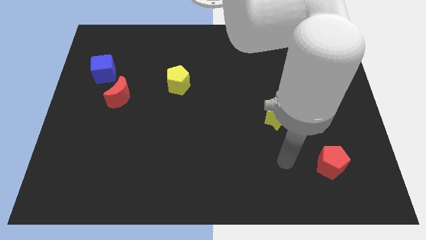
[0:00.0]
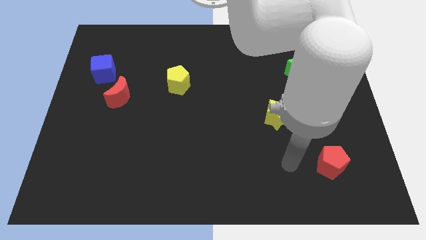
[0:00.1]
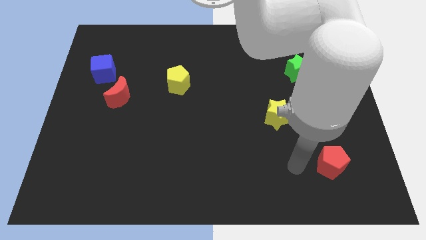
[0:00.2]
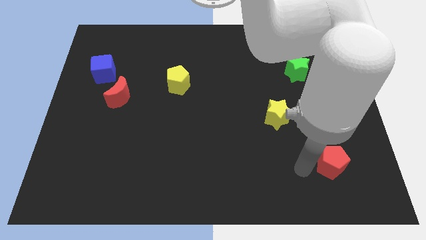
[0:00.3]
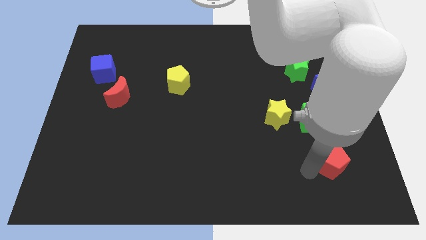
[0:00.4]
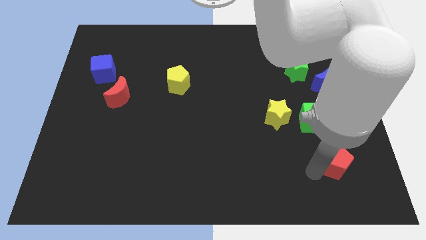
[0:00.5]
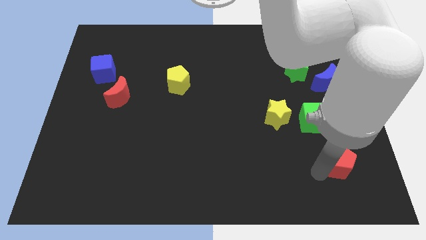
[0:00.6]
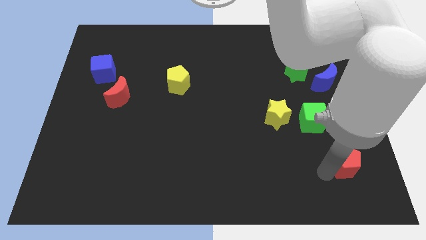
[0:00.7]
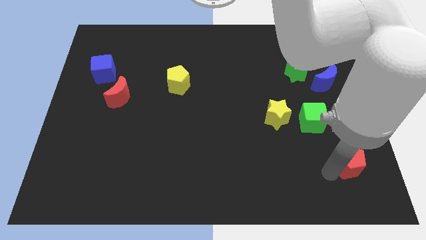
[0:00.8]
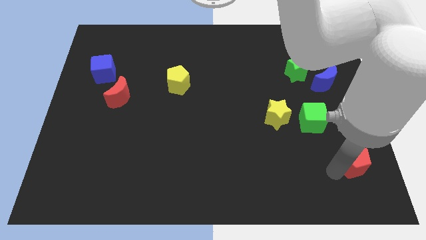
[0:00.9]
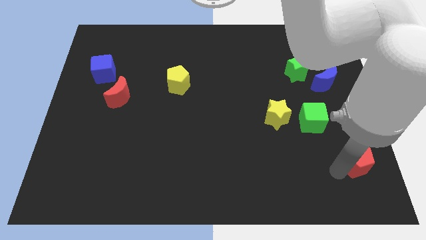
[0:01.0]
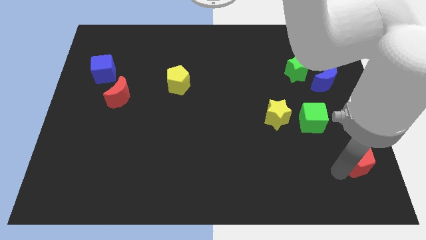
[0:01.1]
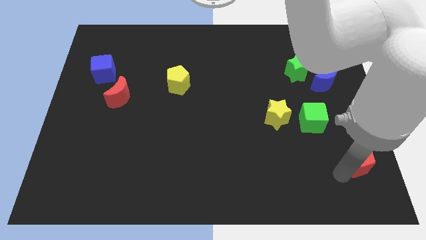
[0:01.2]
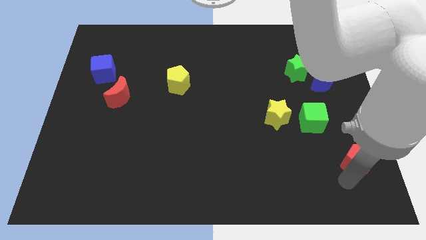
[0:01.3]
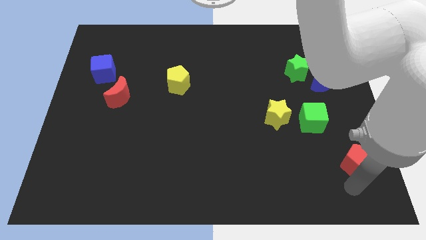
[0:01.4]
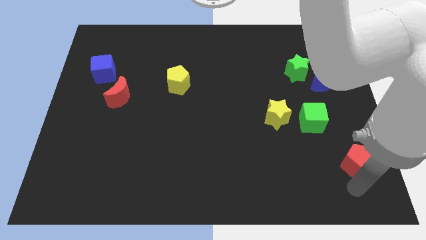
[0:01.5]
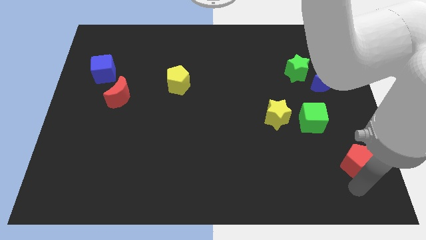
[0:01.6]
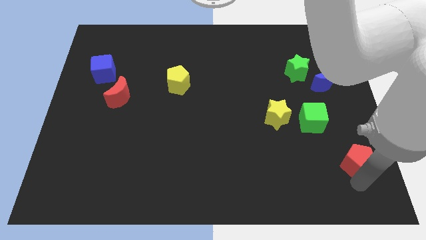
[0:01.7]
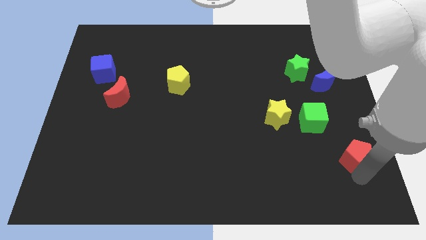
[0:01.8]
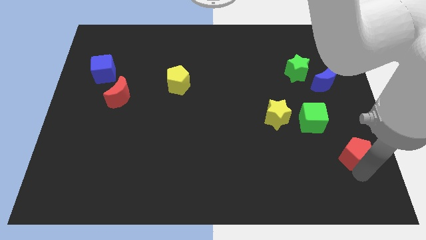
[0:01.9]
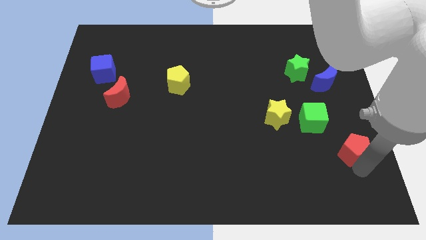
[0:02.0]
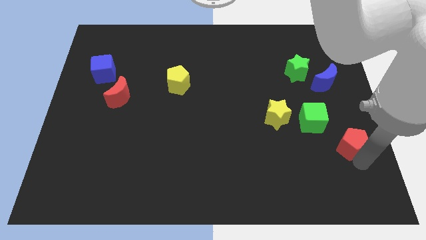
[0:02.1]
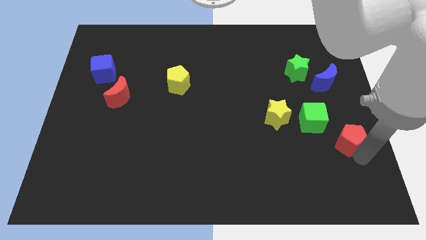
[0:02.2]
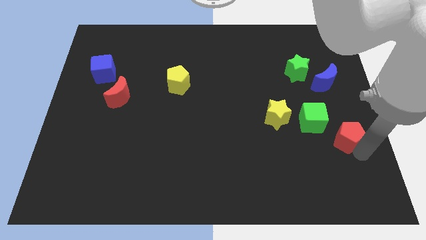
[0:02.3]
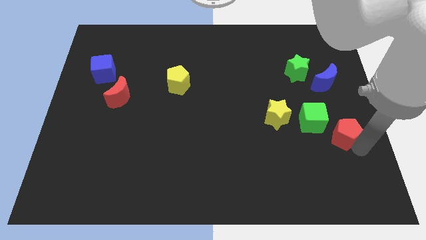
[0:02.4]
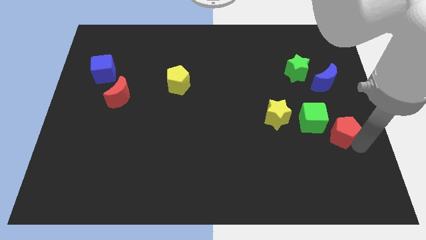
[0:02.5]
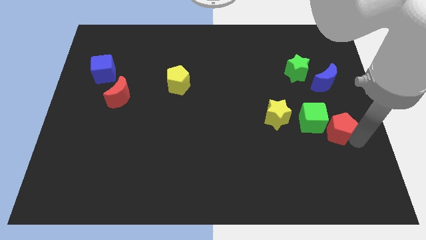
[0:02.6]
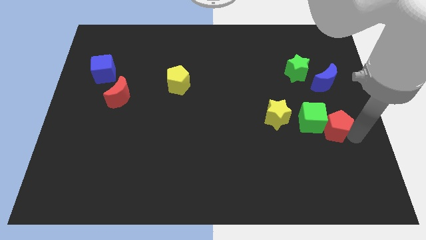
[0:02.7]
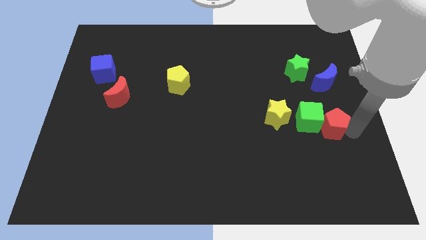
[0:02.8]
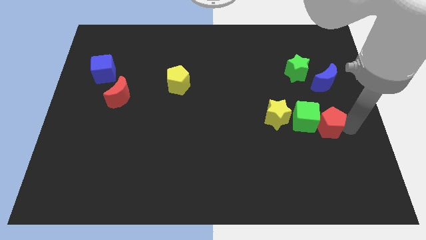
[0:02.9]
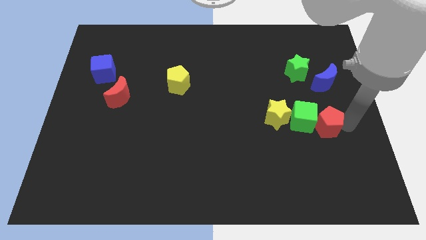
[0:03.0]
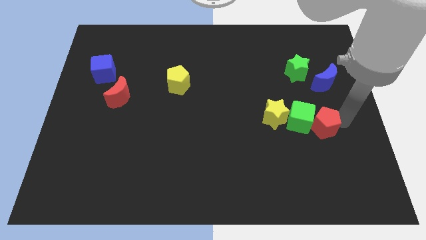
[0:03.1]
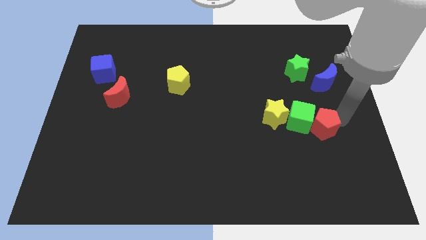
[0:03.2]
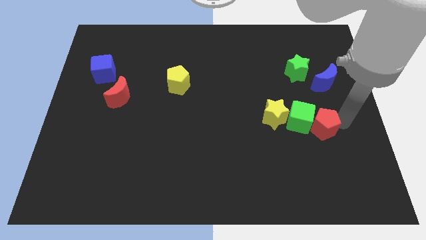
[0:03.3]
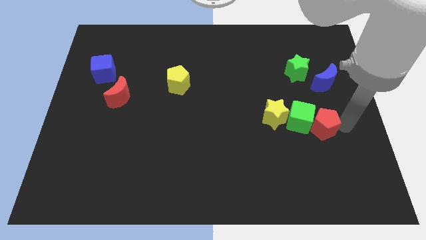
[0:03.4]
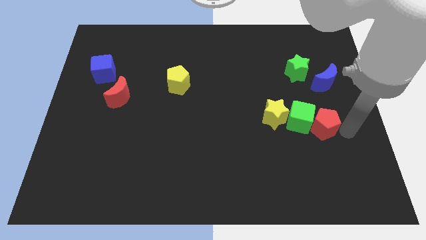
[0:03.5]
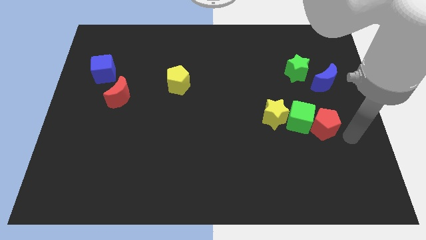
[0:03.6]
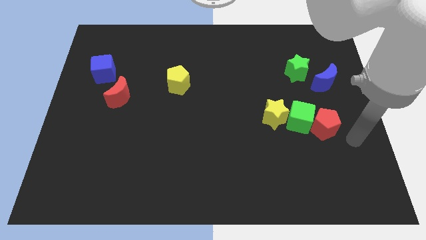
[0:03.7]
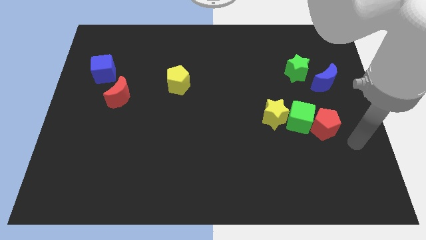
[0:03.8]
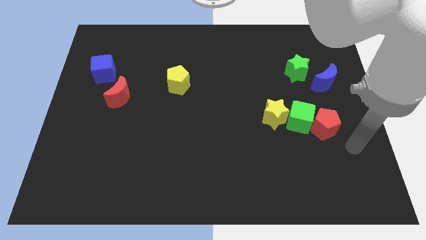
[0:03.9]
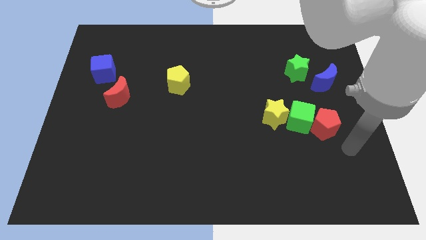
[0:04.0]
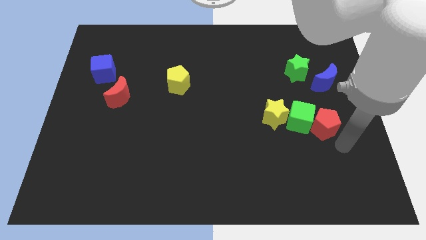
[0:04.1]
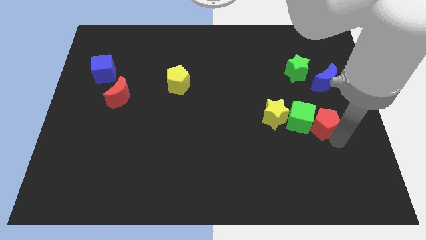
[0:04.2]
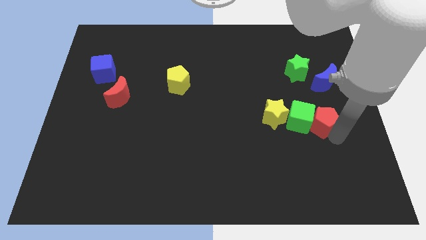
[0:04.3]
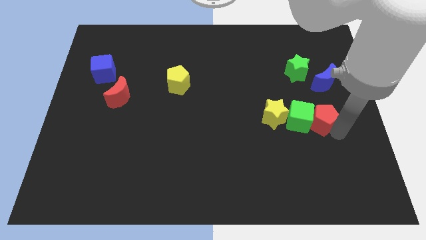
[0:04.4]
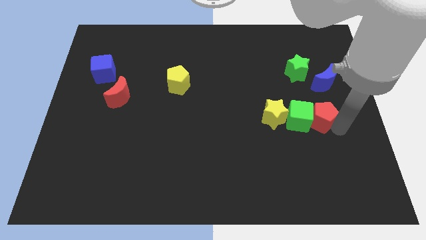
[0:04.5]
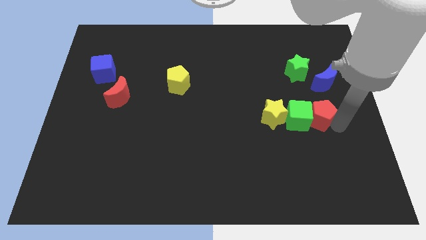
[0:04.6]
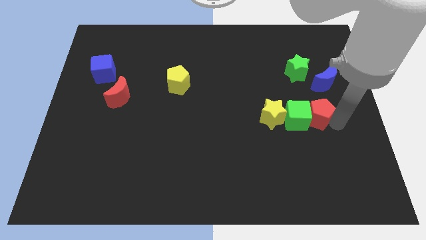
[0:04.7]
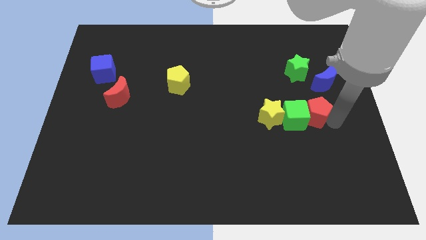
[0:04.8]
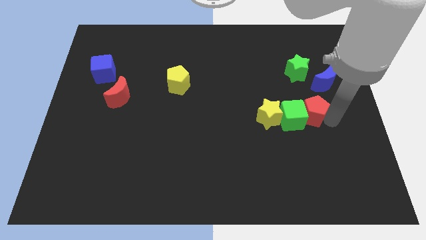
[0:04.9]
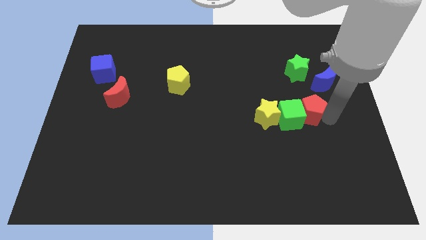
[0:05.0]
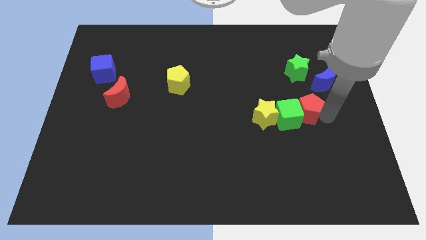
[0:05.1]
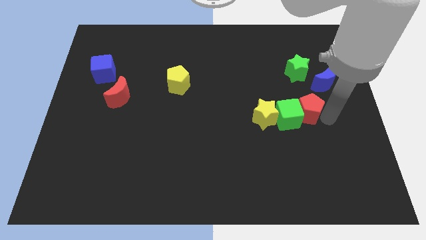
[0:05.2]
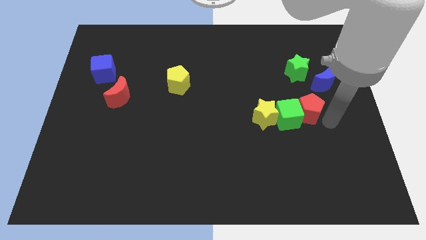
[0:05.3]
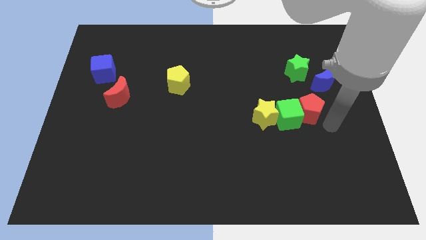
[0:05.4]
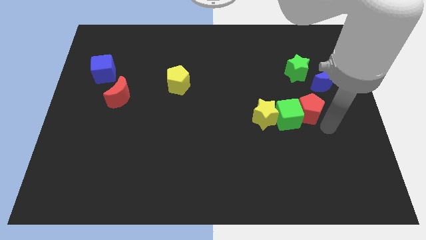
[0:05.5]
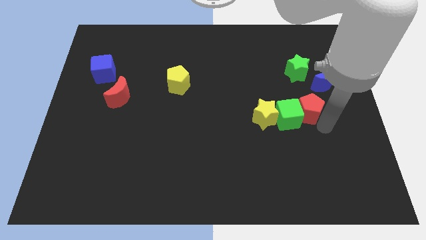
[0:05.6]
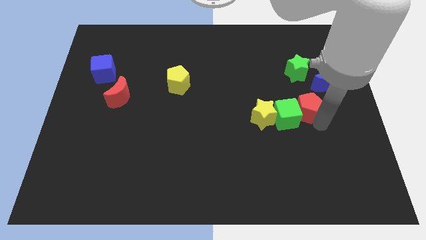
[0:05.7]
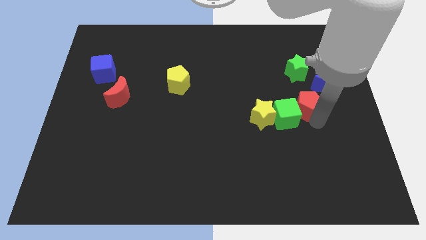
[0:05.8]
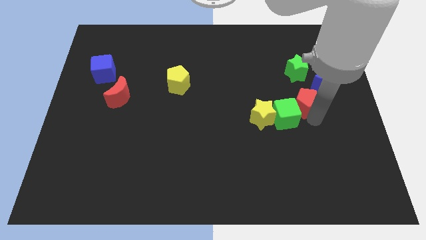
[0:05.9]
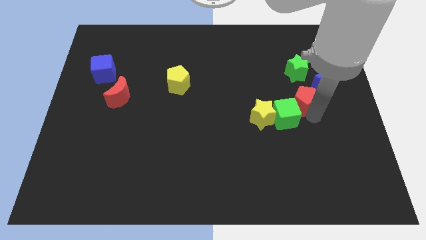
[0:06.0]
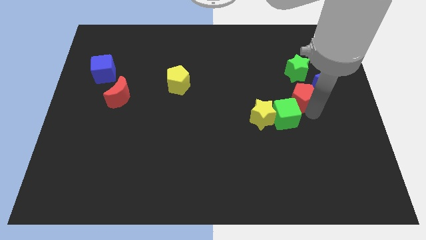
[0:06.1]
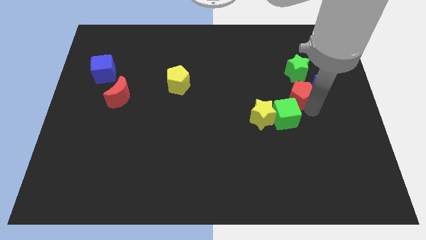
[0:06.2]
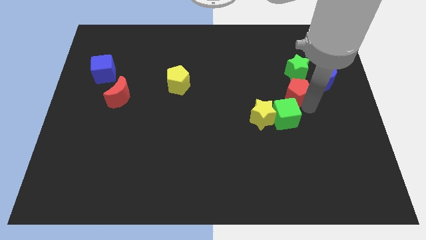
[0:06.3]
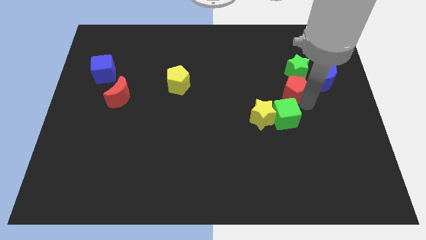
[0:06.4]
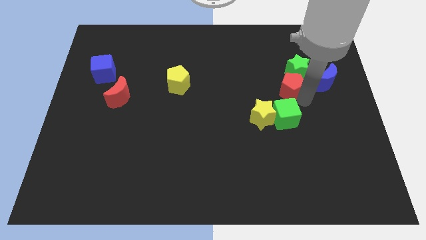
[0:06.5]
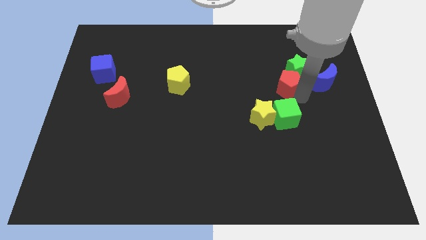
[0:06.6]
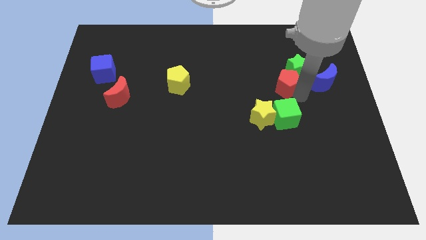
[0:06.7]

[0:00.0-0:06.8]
put the red pentagon towards the green star
